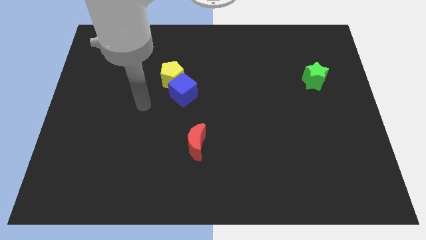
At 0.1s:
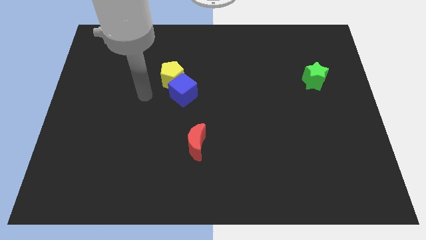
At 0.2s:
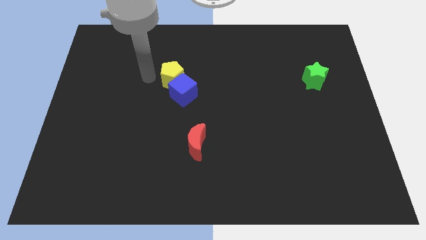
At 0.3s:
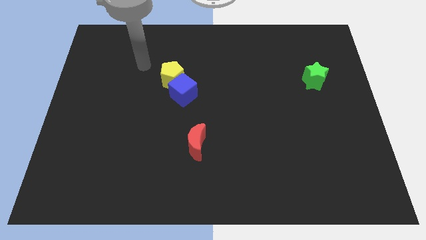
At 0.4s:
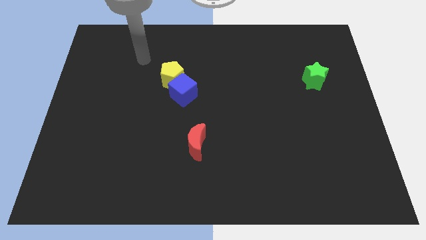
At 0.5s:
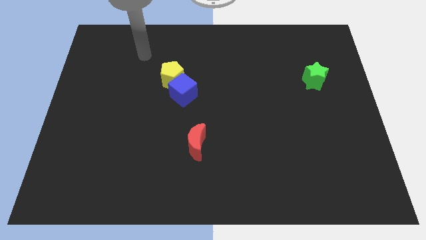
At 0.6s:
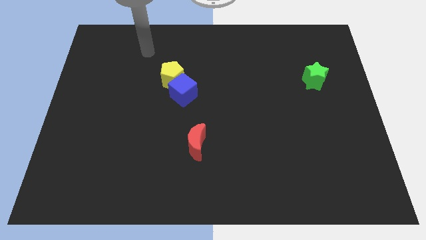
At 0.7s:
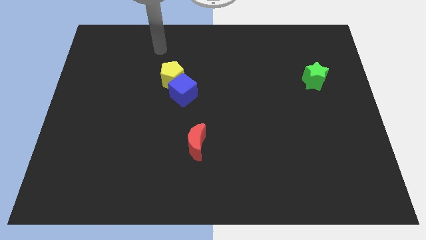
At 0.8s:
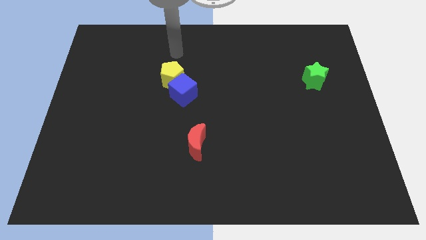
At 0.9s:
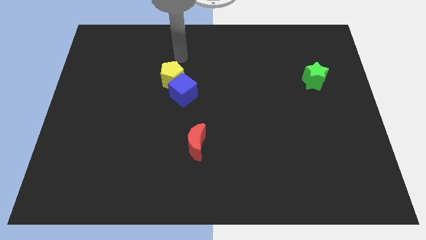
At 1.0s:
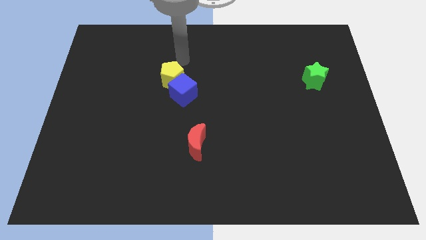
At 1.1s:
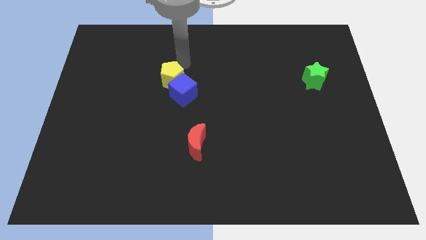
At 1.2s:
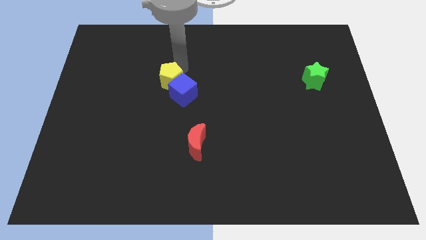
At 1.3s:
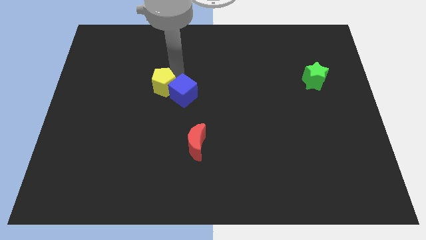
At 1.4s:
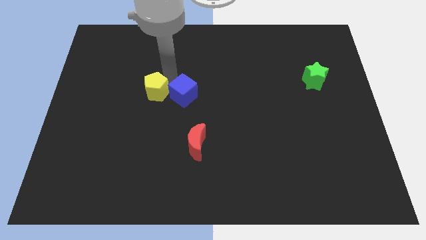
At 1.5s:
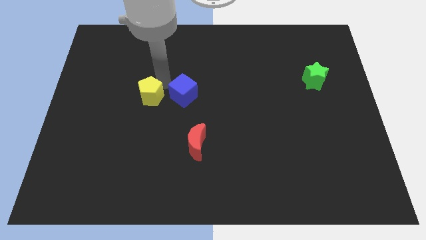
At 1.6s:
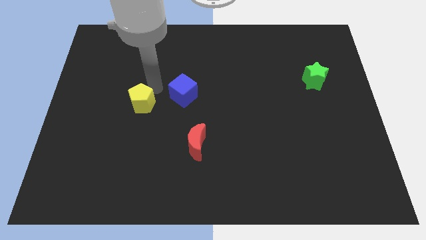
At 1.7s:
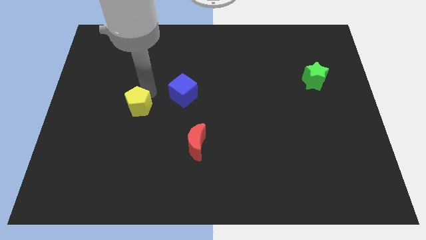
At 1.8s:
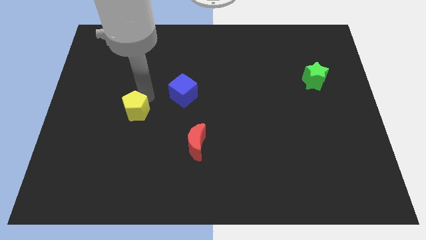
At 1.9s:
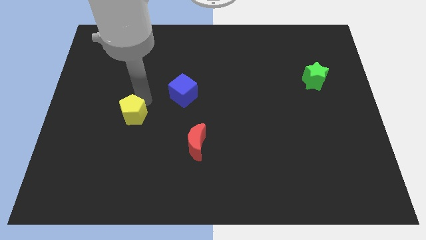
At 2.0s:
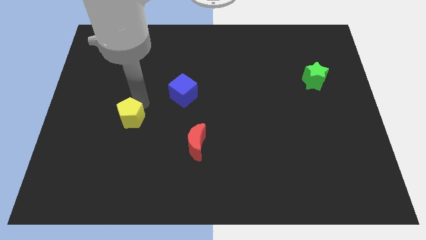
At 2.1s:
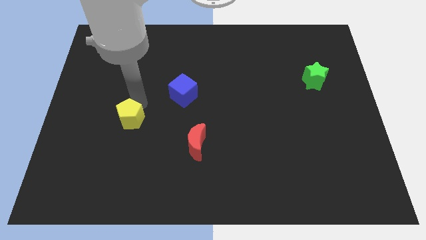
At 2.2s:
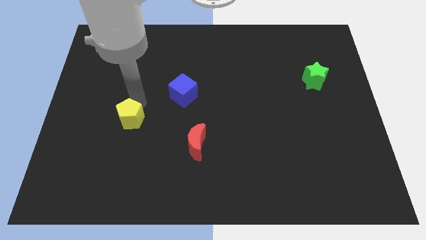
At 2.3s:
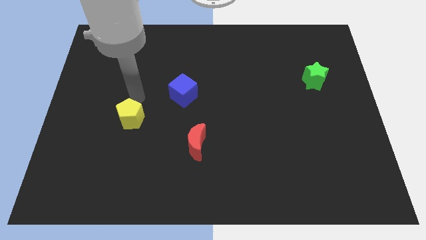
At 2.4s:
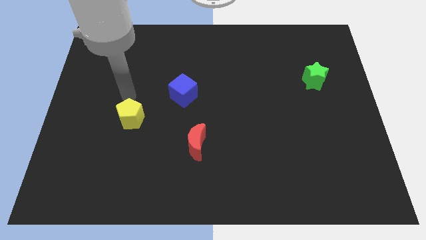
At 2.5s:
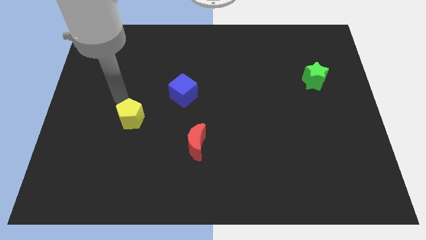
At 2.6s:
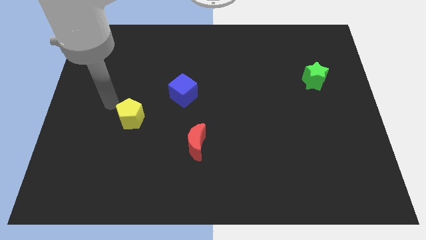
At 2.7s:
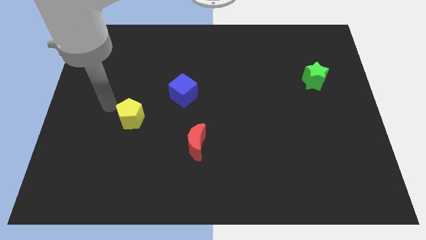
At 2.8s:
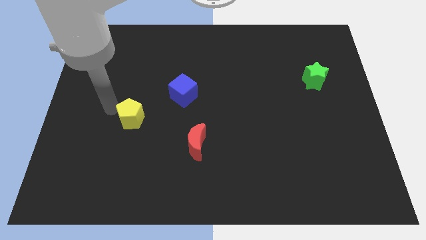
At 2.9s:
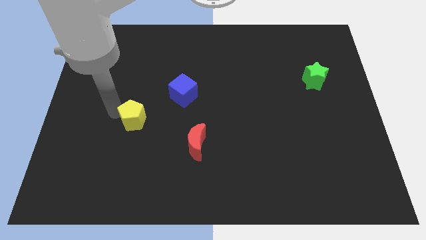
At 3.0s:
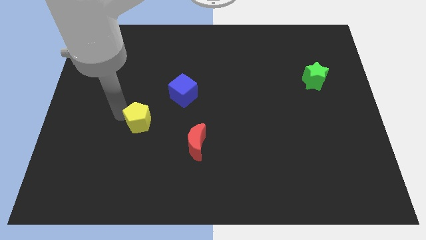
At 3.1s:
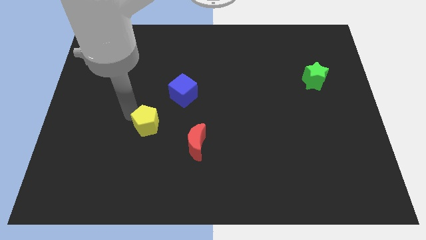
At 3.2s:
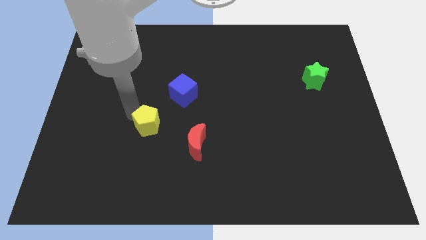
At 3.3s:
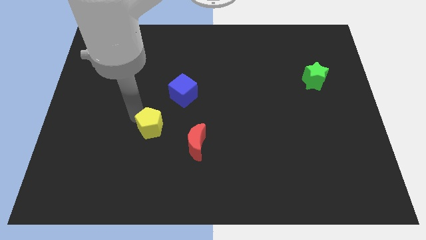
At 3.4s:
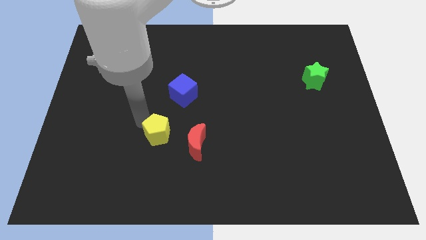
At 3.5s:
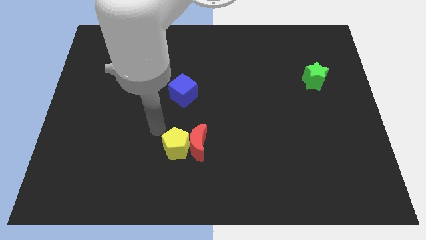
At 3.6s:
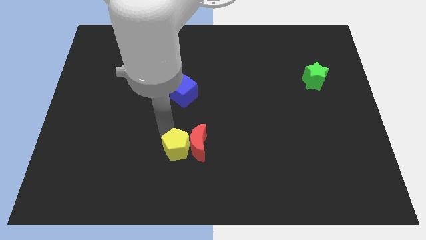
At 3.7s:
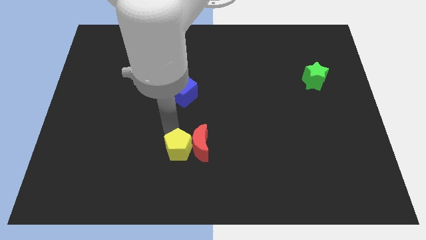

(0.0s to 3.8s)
push the yellow pentagon to the red block

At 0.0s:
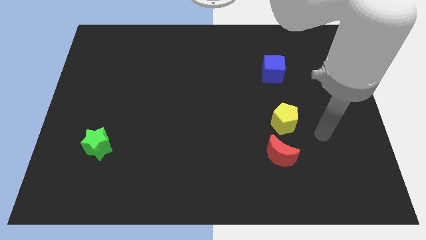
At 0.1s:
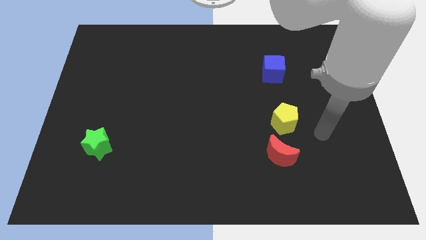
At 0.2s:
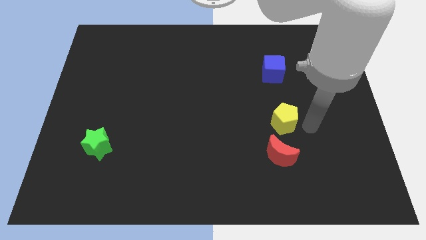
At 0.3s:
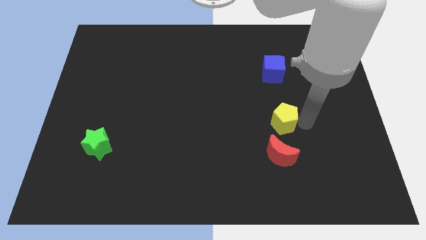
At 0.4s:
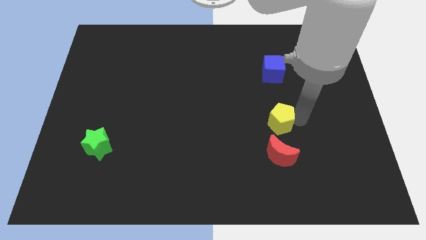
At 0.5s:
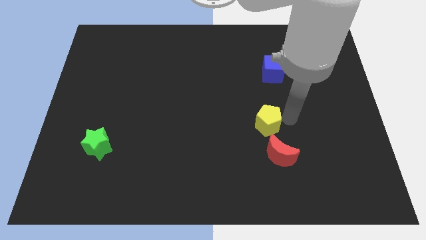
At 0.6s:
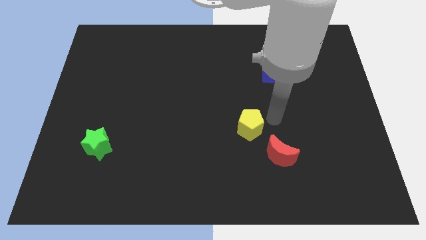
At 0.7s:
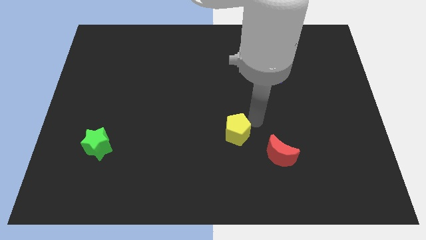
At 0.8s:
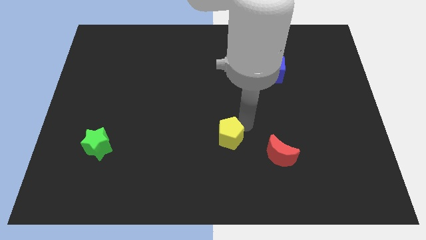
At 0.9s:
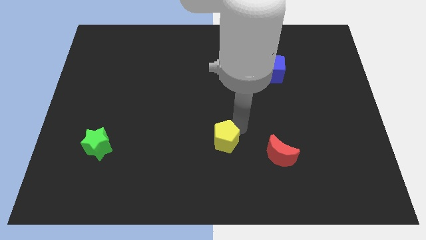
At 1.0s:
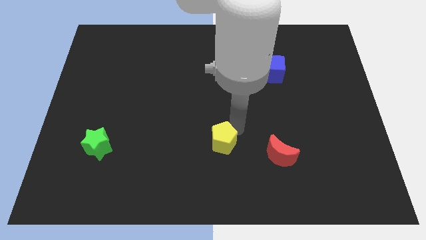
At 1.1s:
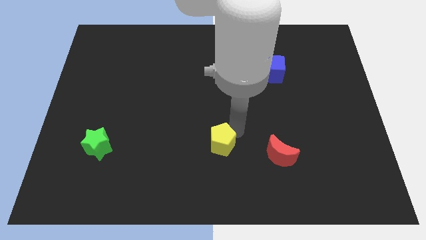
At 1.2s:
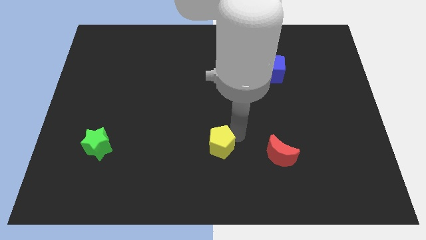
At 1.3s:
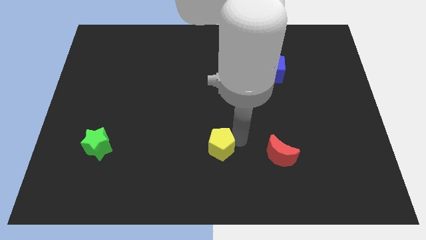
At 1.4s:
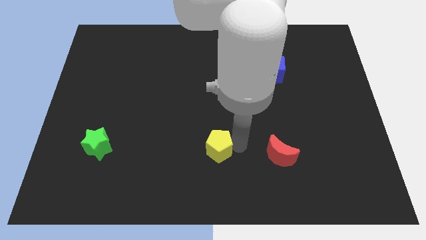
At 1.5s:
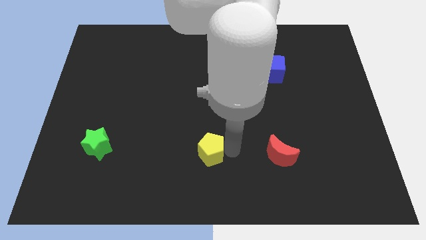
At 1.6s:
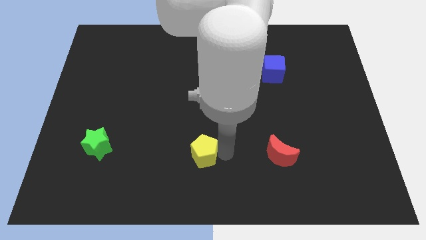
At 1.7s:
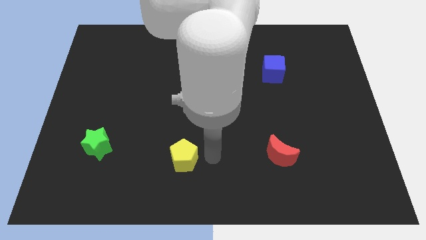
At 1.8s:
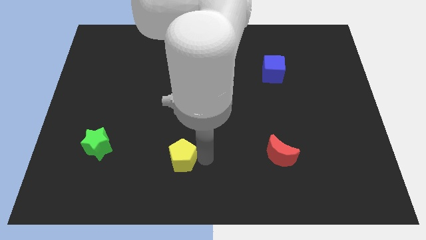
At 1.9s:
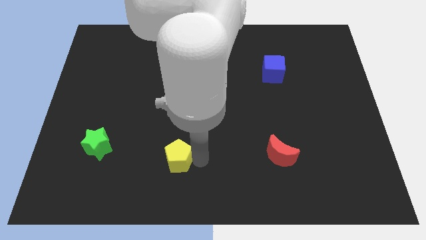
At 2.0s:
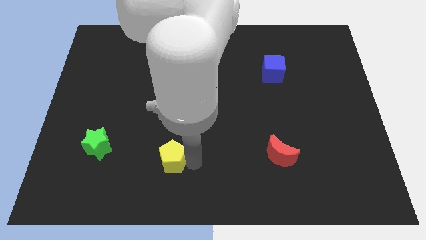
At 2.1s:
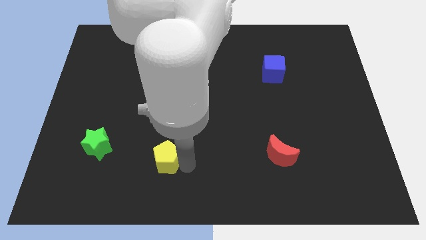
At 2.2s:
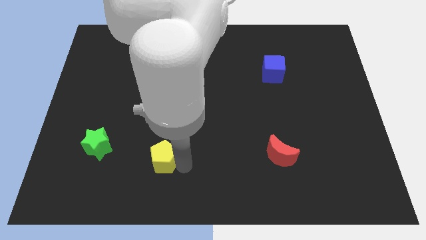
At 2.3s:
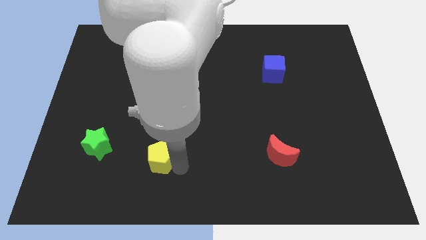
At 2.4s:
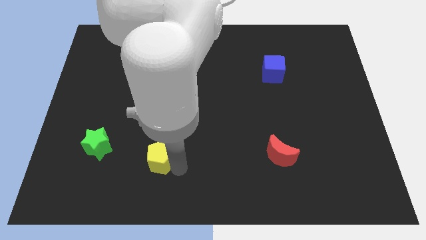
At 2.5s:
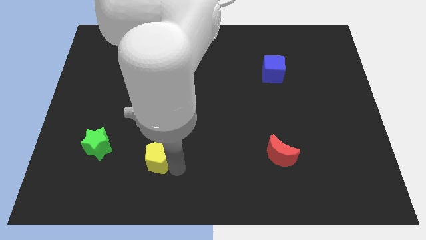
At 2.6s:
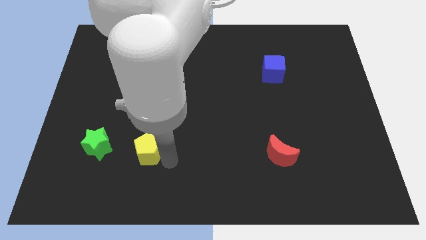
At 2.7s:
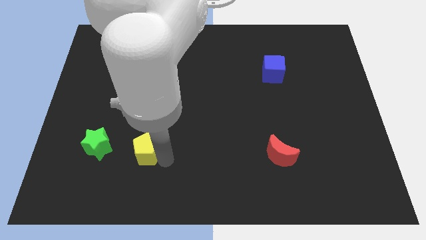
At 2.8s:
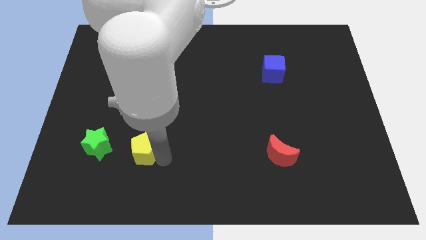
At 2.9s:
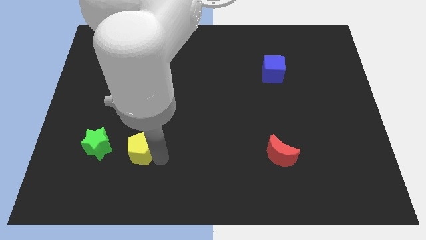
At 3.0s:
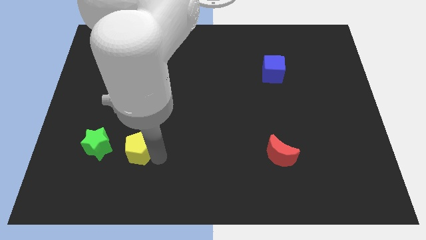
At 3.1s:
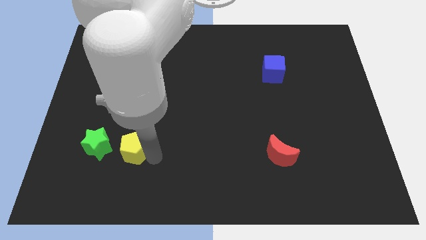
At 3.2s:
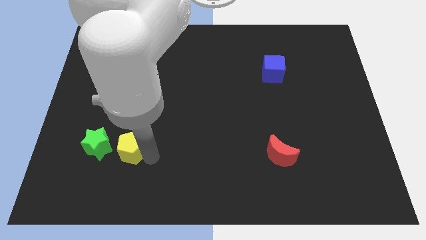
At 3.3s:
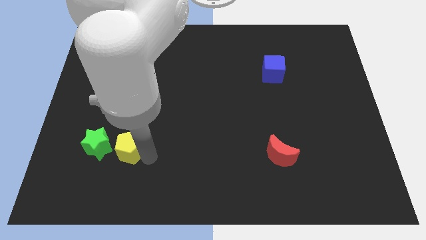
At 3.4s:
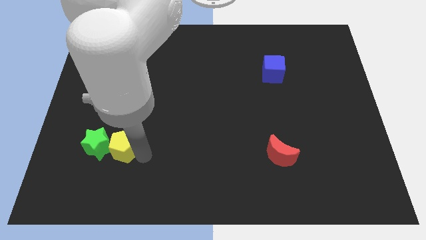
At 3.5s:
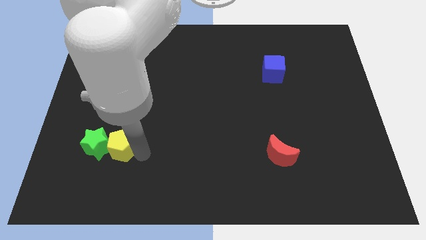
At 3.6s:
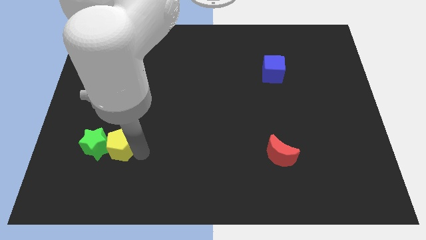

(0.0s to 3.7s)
slide the yellow block to the green block

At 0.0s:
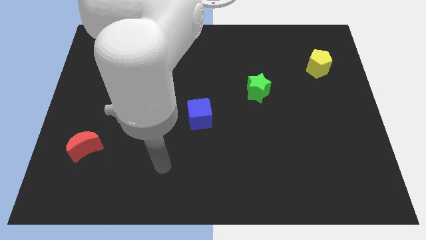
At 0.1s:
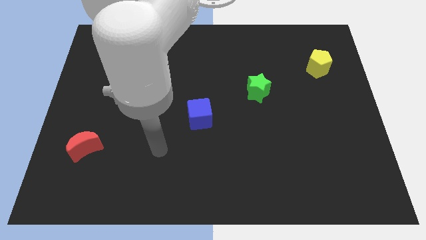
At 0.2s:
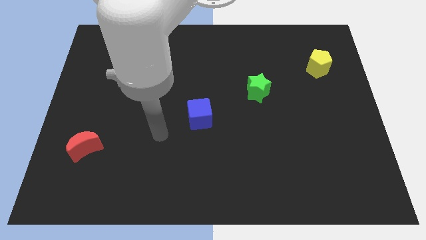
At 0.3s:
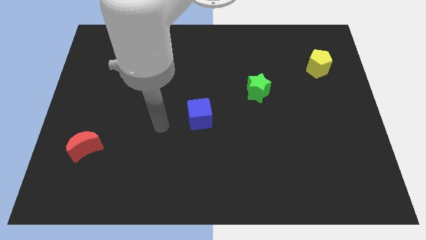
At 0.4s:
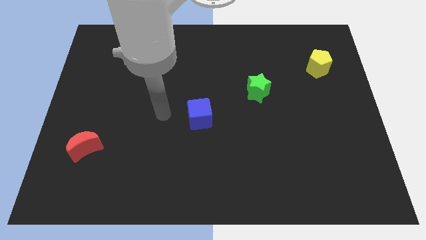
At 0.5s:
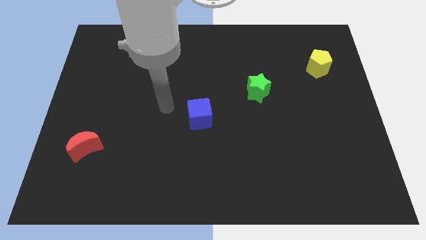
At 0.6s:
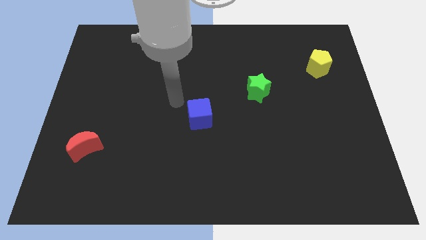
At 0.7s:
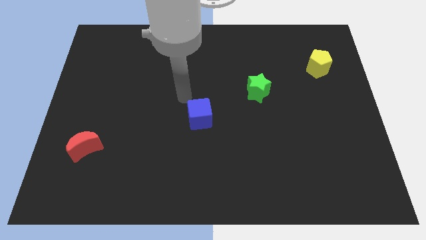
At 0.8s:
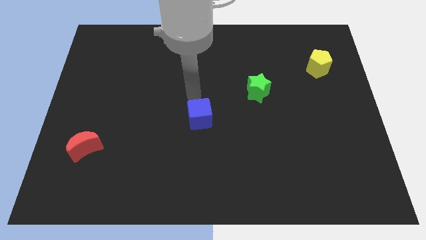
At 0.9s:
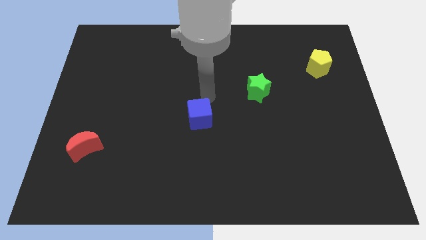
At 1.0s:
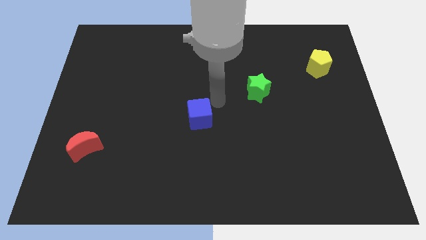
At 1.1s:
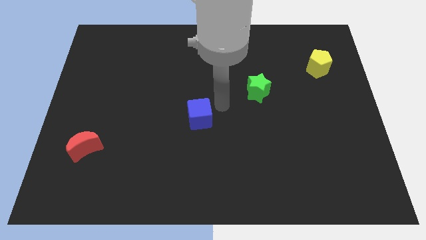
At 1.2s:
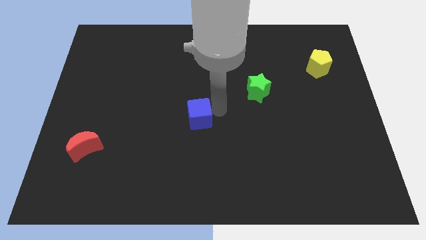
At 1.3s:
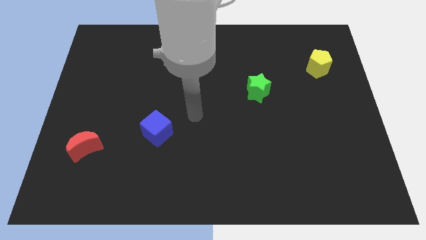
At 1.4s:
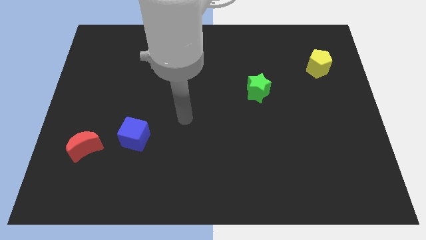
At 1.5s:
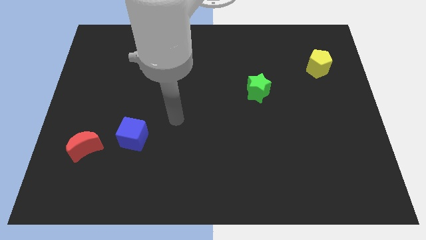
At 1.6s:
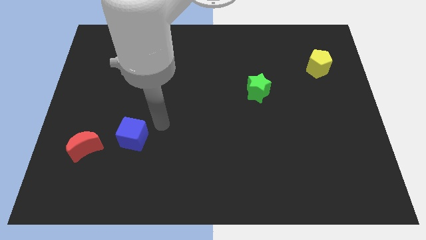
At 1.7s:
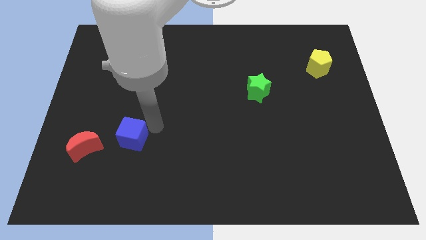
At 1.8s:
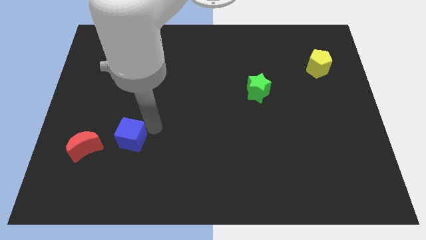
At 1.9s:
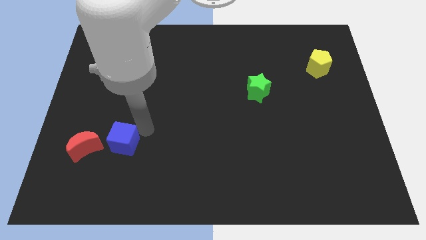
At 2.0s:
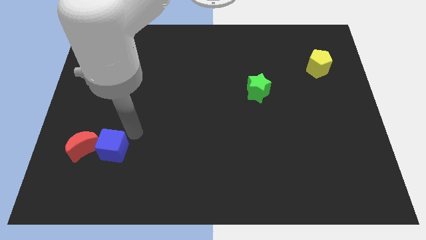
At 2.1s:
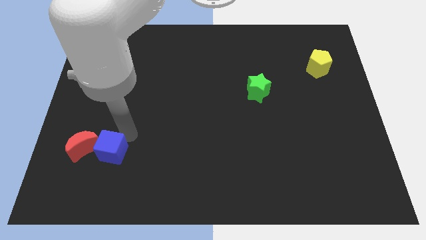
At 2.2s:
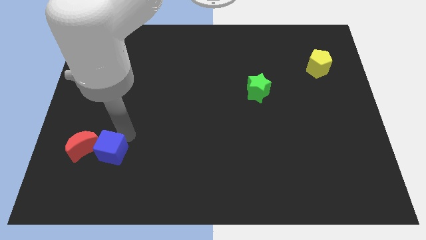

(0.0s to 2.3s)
push the blue cube to the moon
